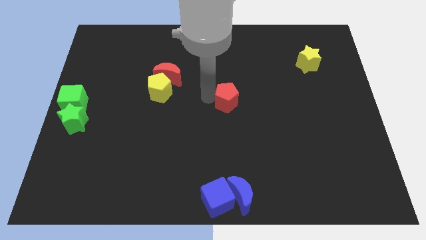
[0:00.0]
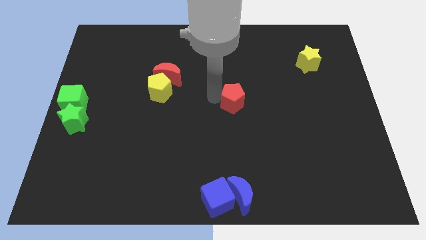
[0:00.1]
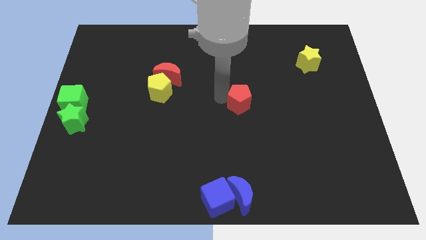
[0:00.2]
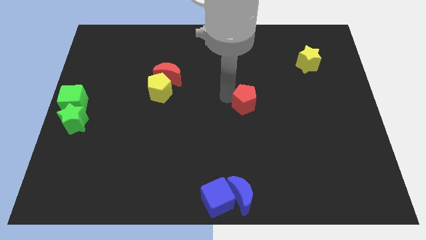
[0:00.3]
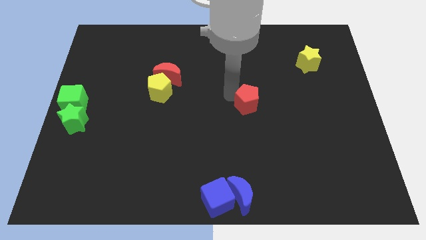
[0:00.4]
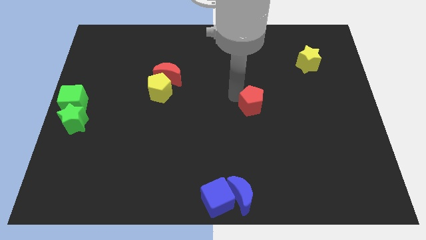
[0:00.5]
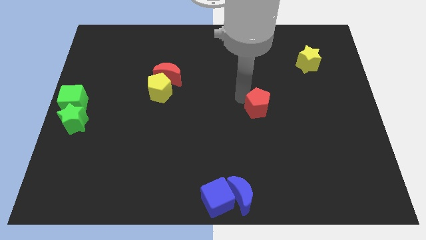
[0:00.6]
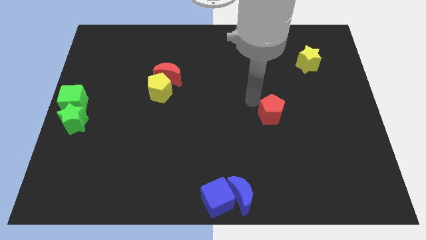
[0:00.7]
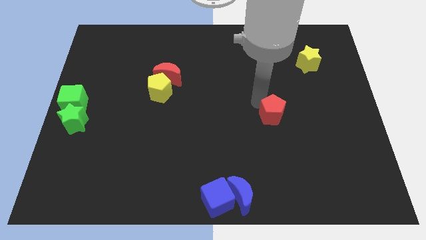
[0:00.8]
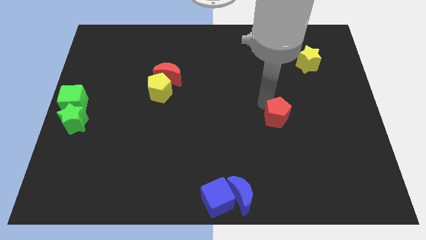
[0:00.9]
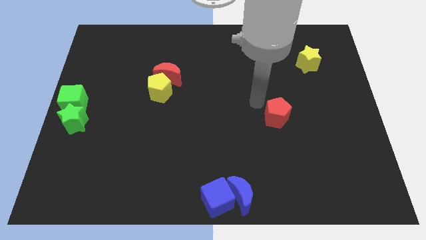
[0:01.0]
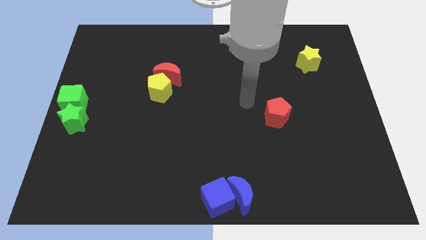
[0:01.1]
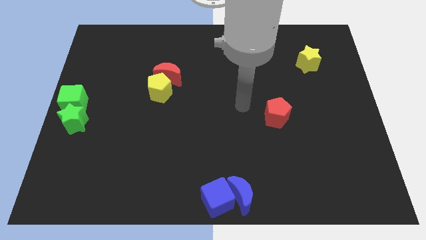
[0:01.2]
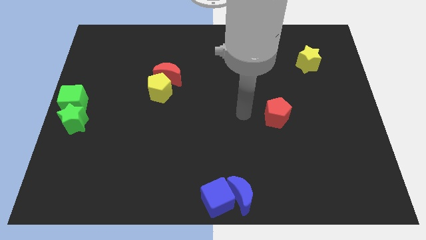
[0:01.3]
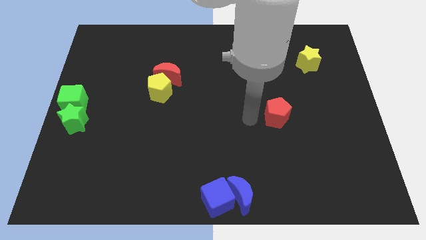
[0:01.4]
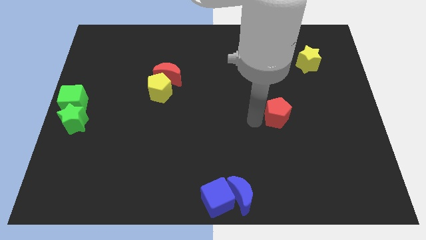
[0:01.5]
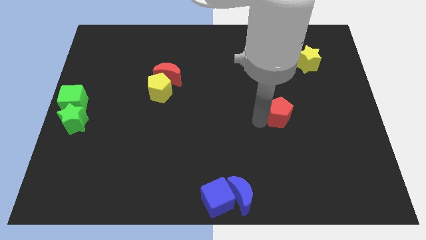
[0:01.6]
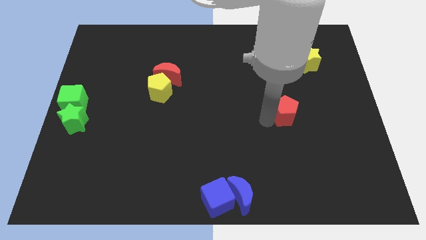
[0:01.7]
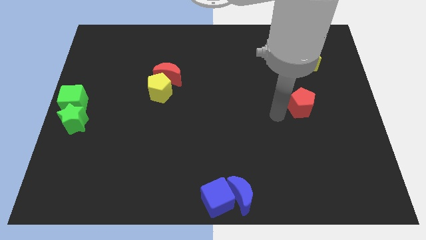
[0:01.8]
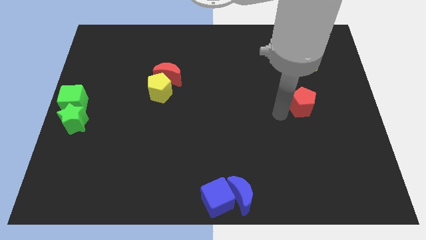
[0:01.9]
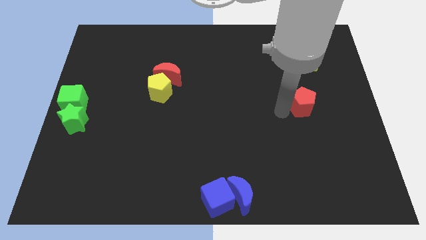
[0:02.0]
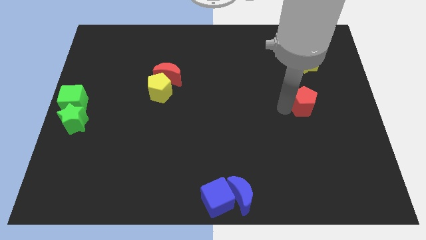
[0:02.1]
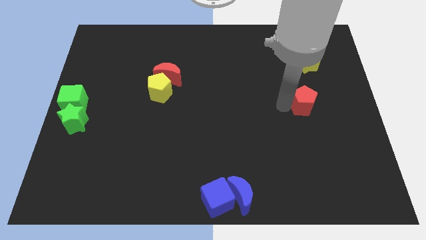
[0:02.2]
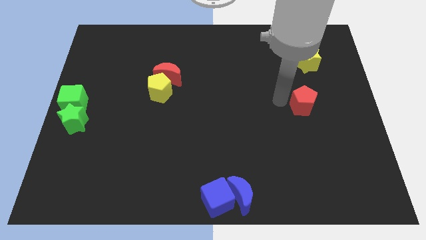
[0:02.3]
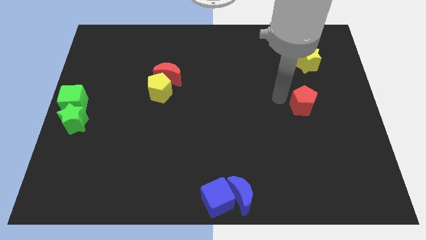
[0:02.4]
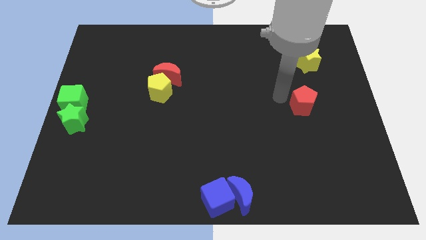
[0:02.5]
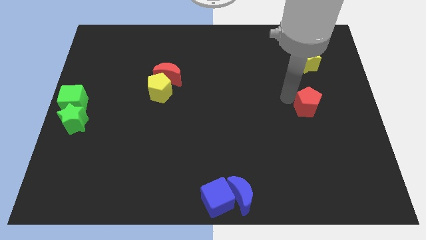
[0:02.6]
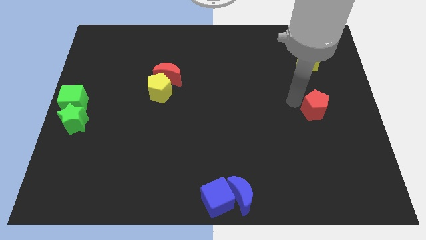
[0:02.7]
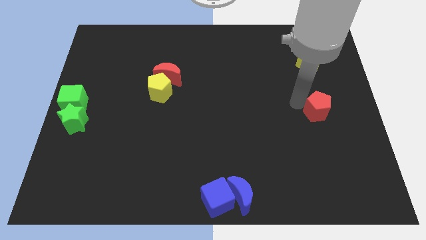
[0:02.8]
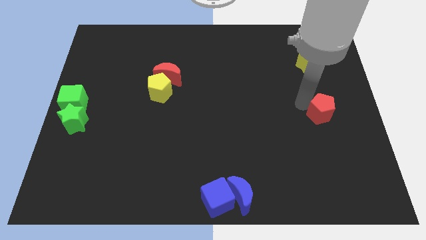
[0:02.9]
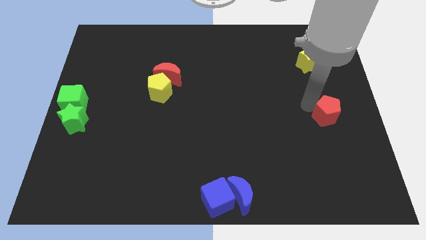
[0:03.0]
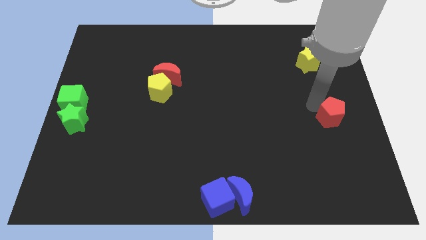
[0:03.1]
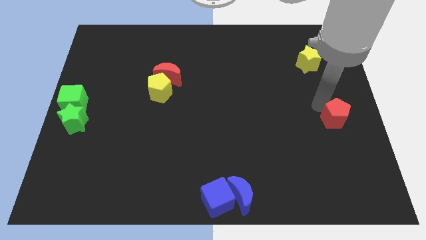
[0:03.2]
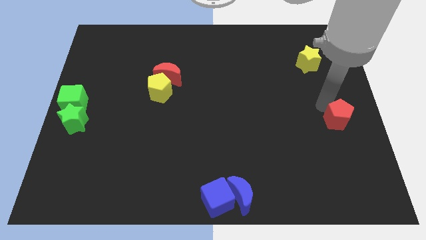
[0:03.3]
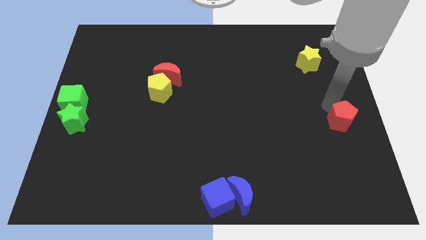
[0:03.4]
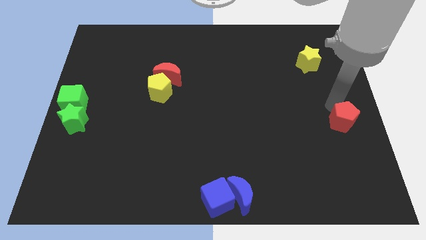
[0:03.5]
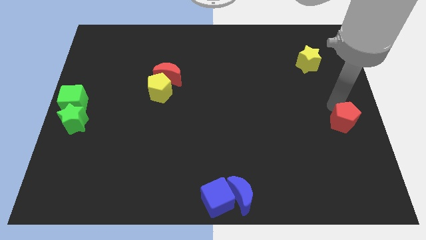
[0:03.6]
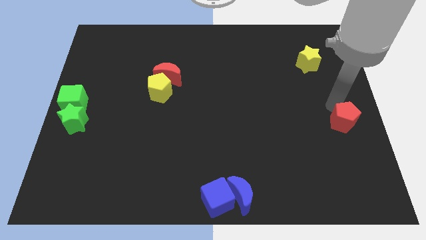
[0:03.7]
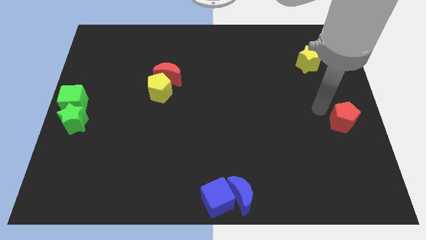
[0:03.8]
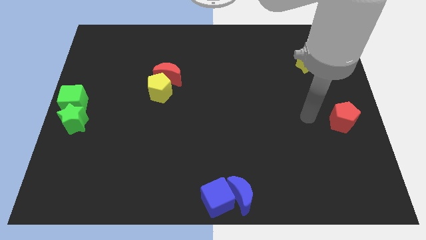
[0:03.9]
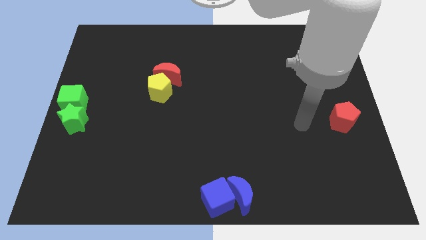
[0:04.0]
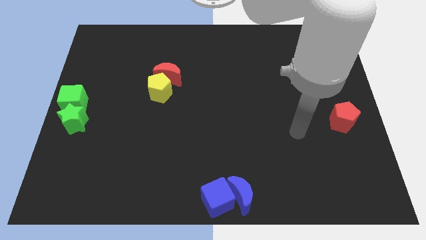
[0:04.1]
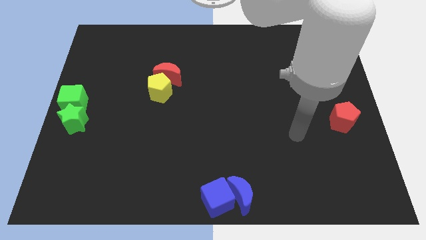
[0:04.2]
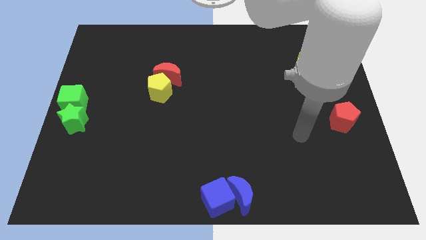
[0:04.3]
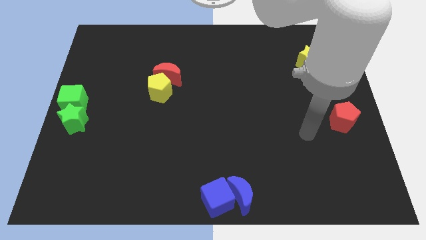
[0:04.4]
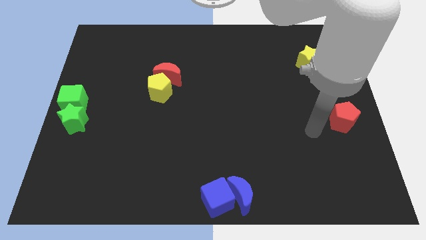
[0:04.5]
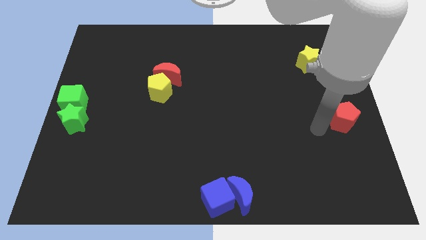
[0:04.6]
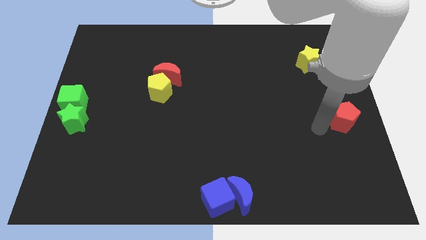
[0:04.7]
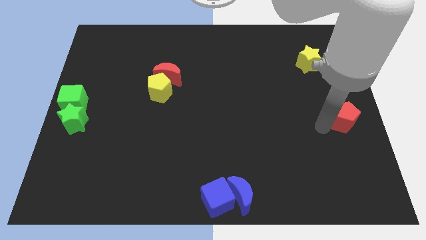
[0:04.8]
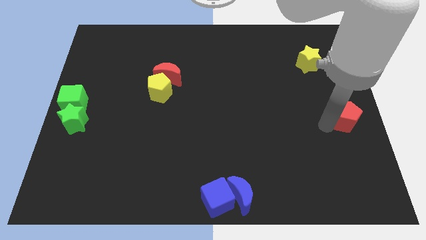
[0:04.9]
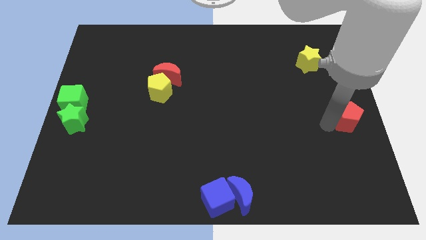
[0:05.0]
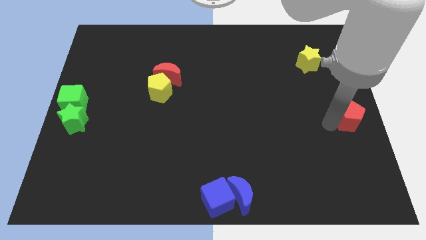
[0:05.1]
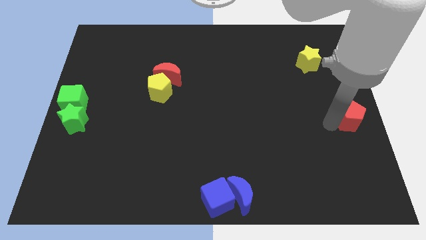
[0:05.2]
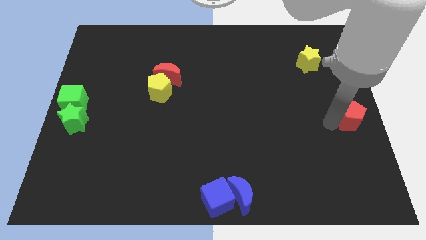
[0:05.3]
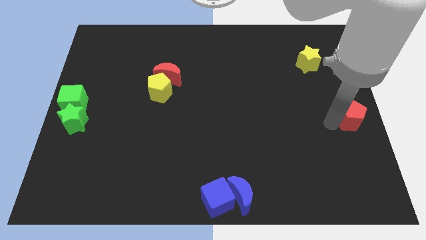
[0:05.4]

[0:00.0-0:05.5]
move red pentagon to the right side of the board

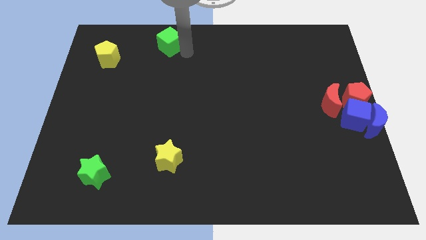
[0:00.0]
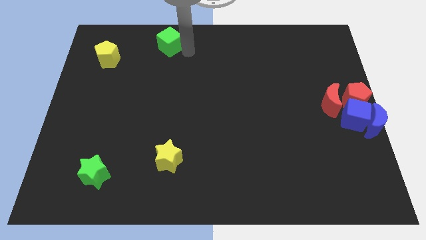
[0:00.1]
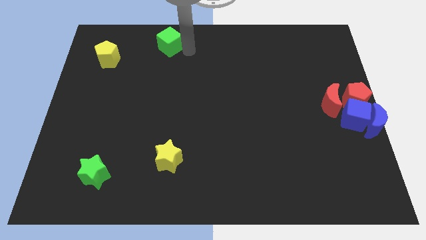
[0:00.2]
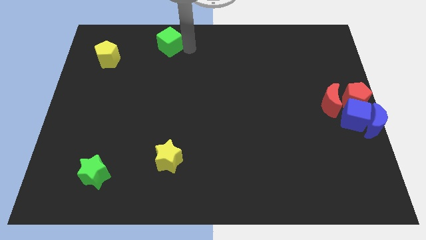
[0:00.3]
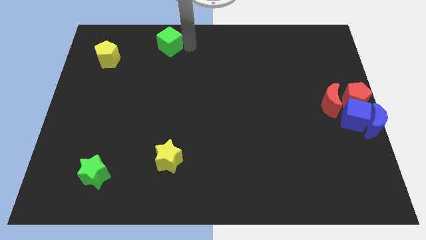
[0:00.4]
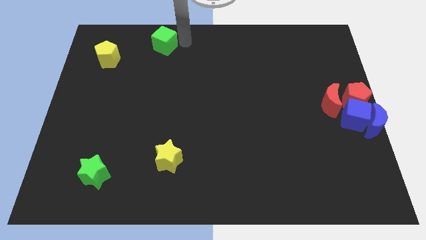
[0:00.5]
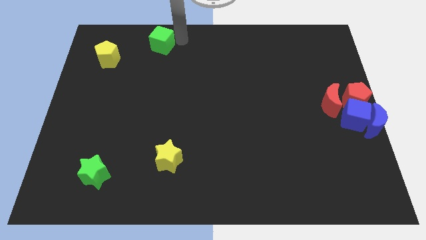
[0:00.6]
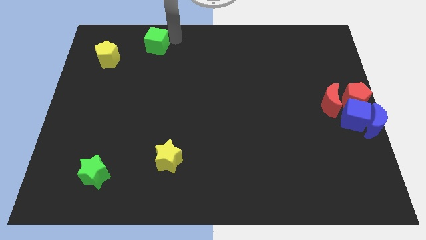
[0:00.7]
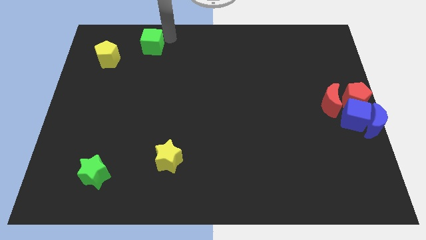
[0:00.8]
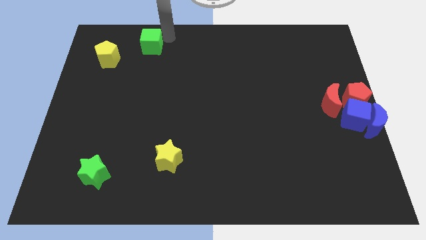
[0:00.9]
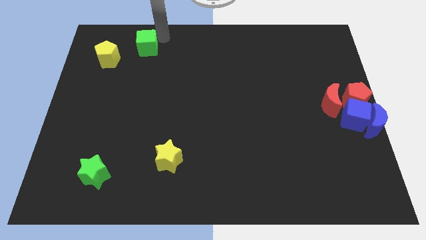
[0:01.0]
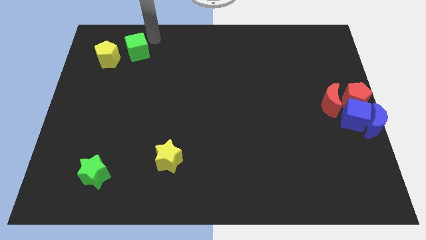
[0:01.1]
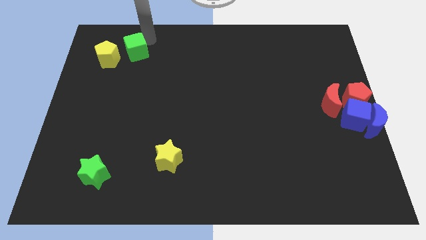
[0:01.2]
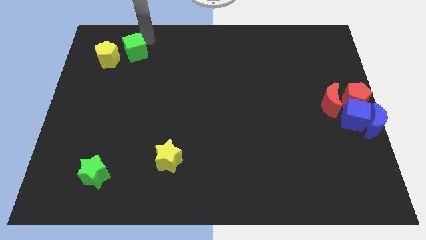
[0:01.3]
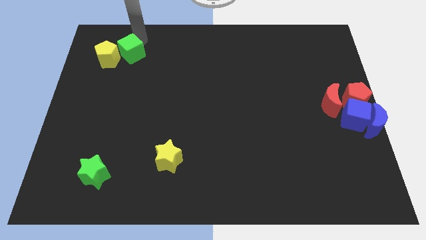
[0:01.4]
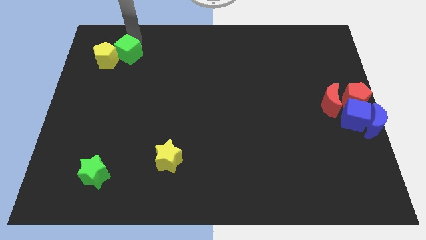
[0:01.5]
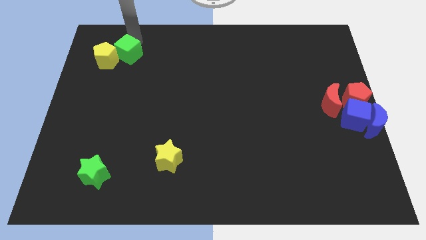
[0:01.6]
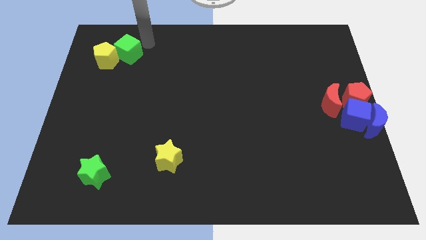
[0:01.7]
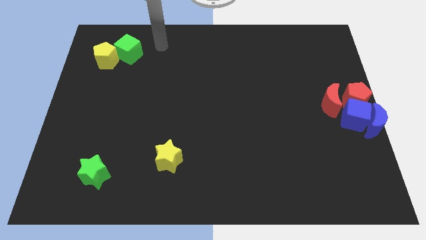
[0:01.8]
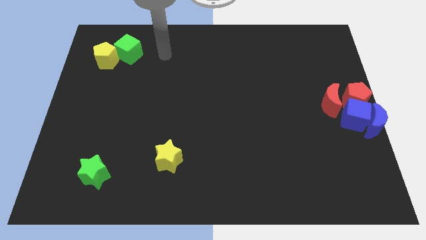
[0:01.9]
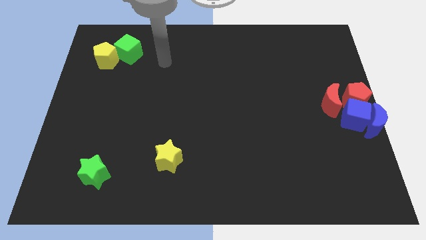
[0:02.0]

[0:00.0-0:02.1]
put the green cube into the yellow pentagon

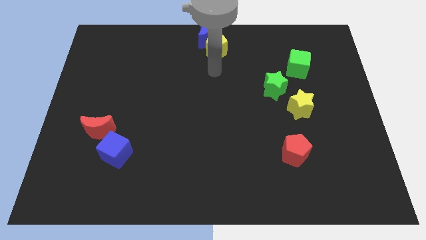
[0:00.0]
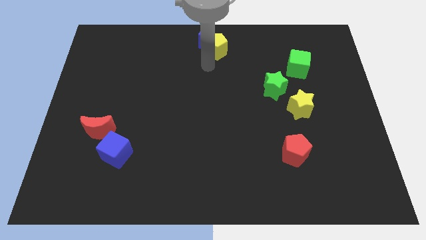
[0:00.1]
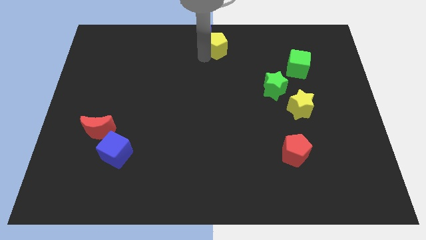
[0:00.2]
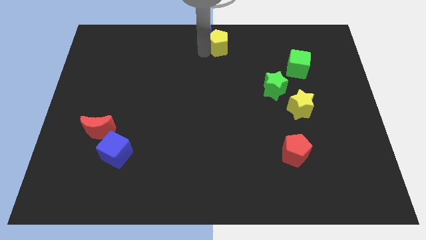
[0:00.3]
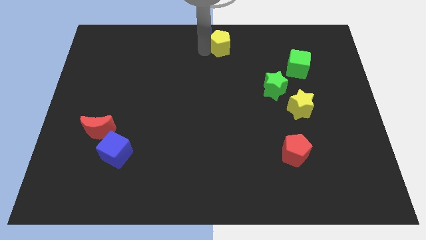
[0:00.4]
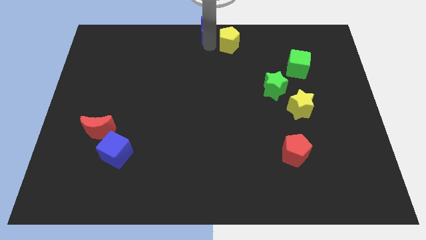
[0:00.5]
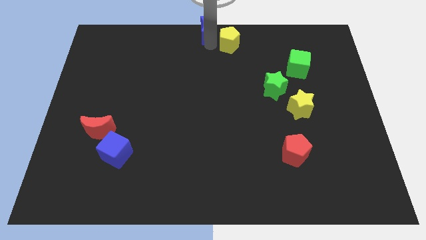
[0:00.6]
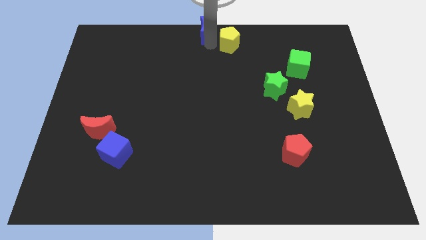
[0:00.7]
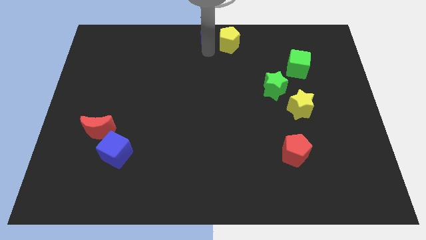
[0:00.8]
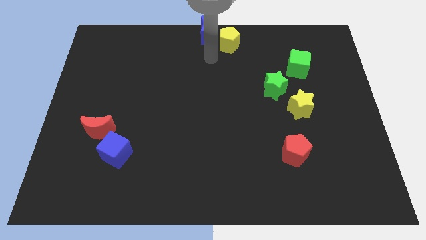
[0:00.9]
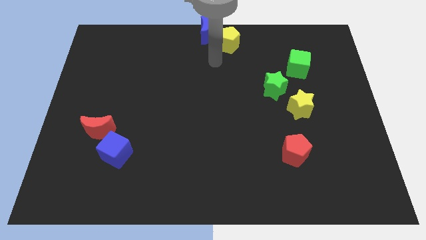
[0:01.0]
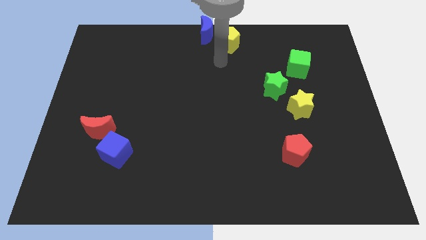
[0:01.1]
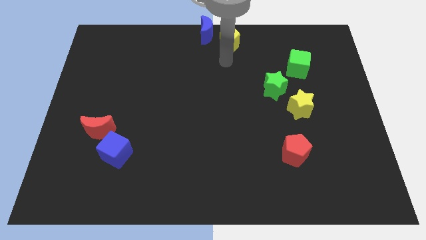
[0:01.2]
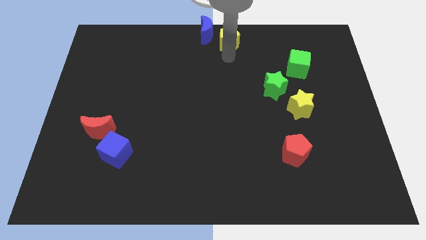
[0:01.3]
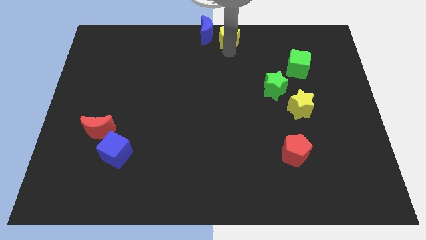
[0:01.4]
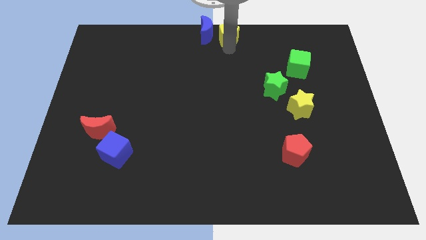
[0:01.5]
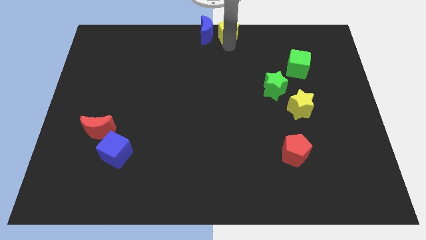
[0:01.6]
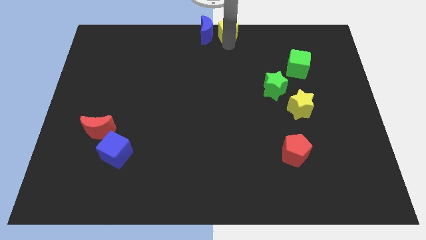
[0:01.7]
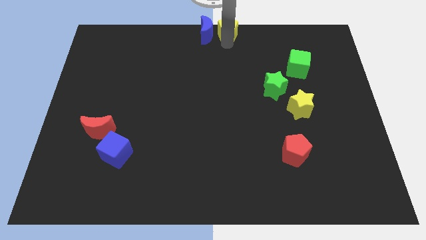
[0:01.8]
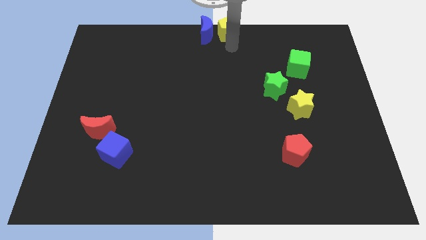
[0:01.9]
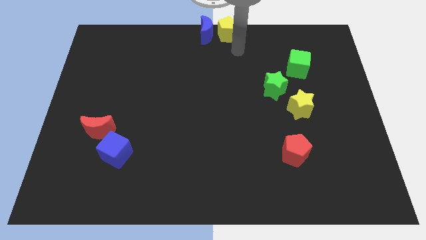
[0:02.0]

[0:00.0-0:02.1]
place the yellow pentagon to the right of the blue moon
